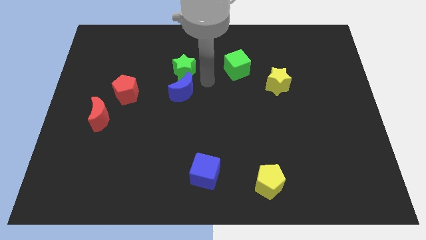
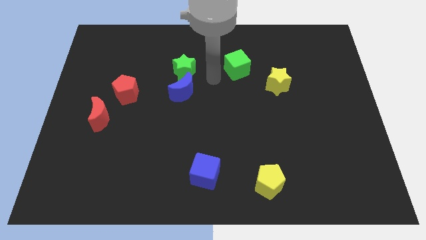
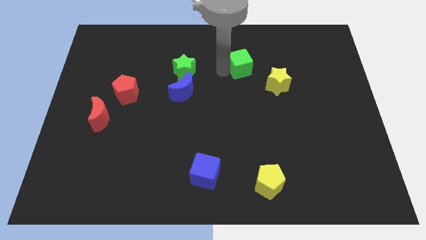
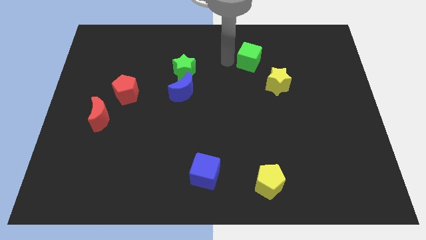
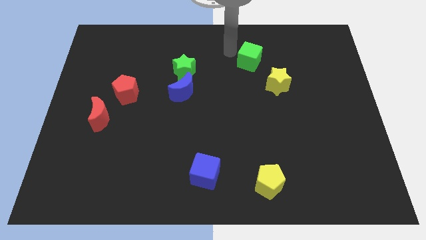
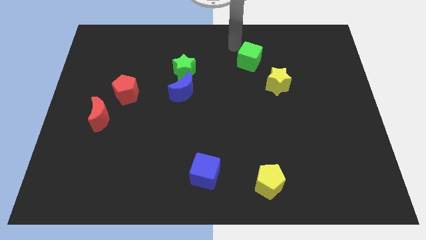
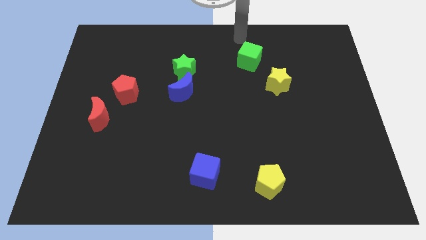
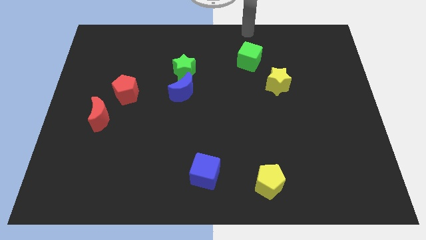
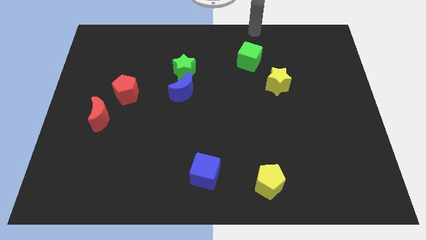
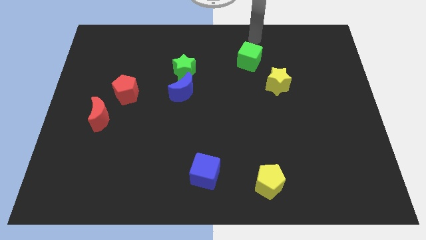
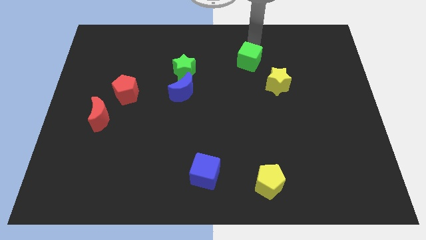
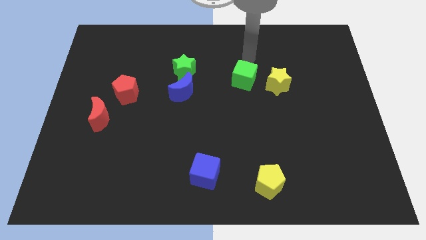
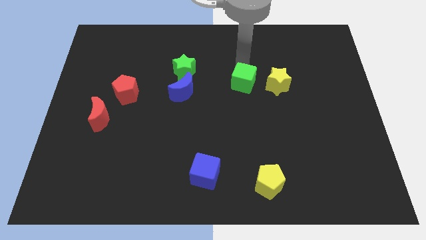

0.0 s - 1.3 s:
move the green cube to the left of the yellow star

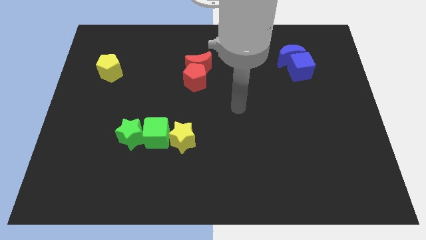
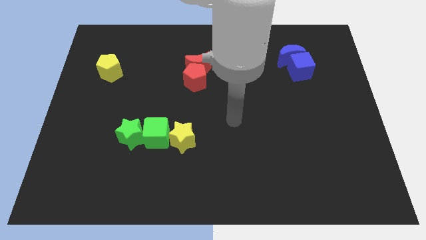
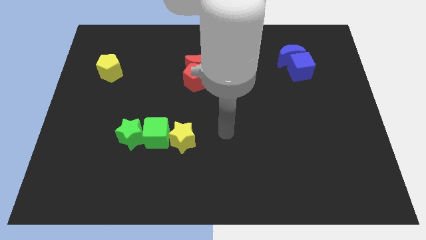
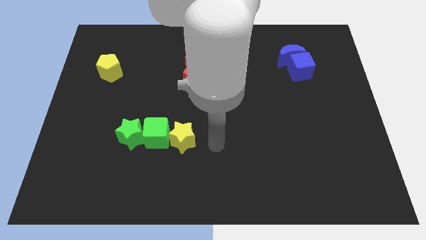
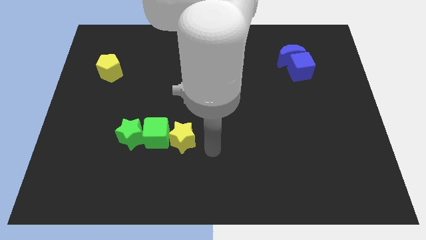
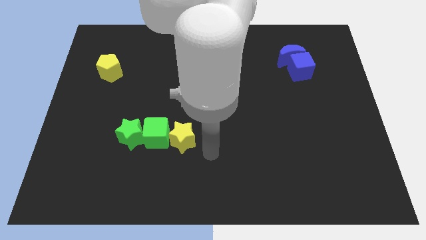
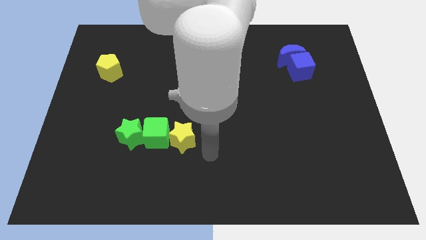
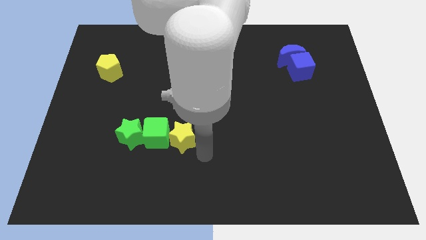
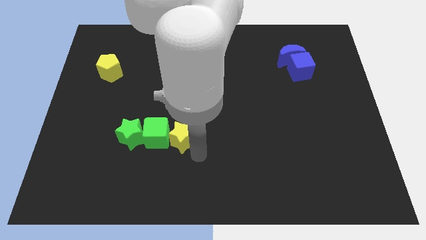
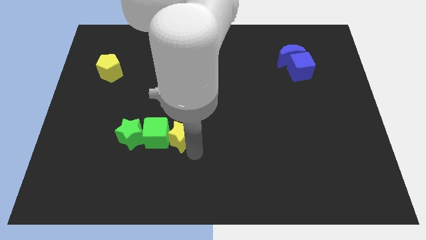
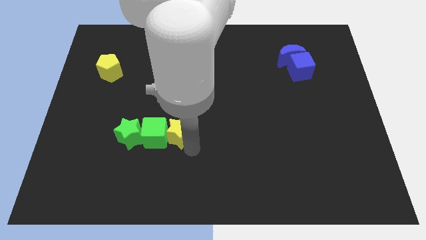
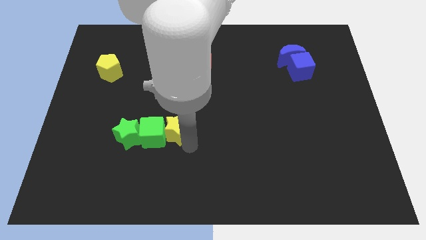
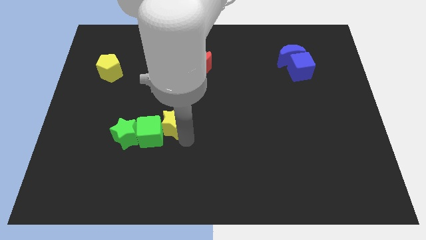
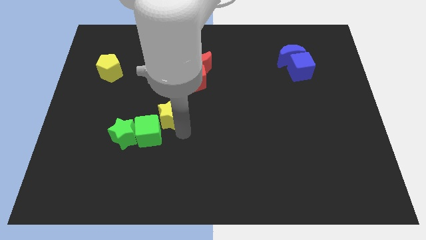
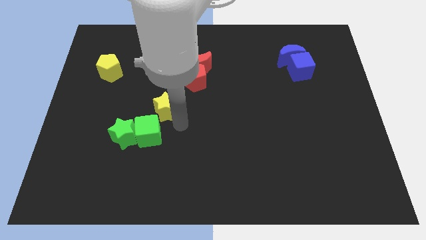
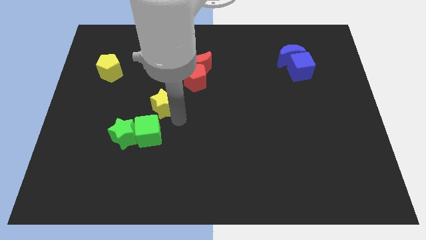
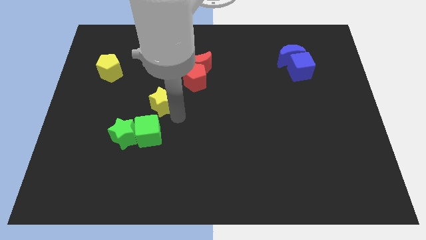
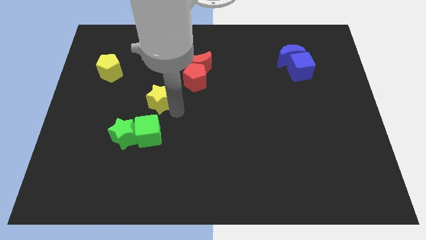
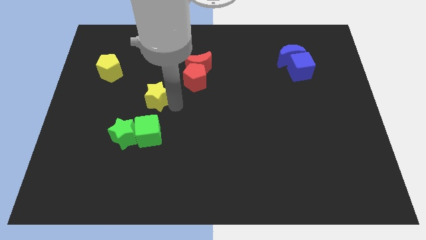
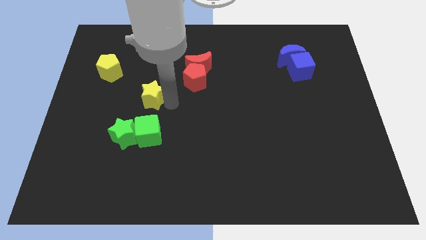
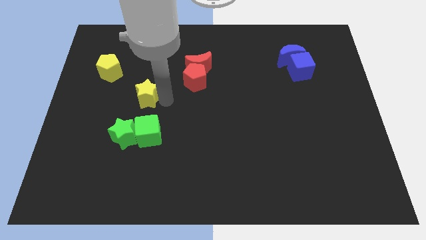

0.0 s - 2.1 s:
place the yellow star above the green cube

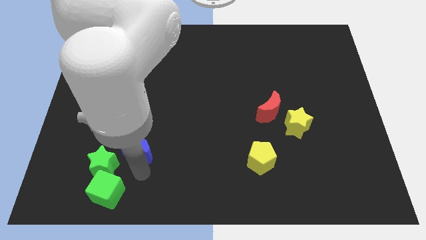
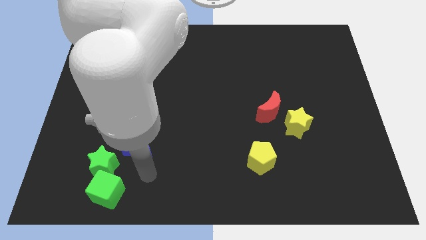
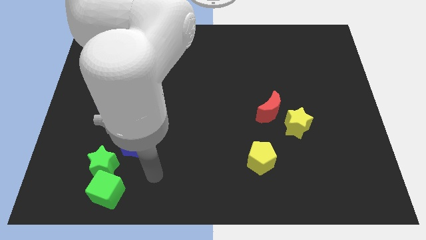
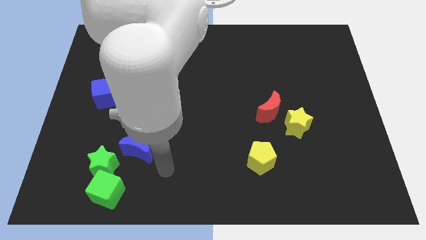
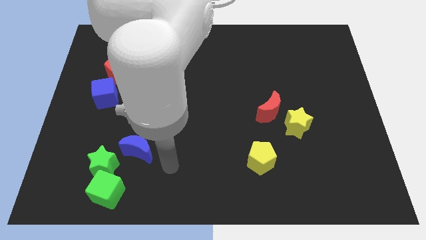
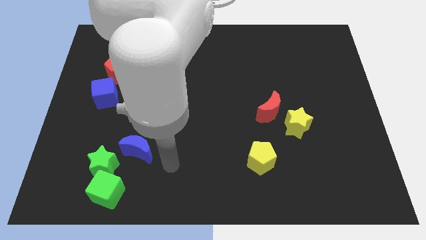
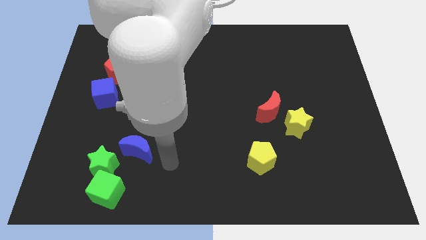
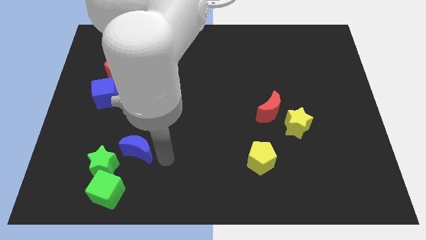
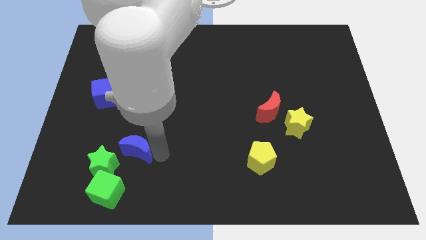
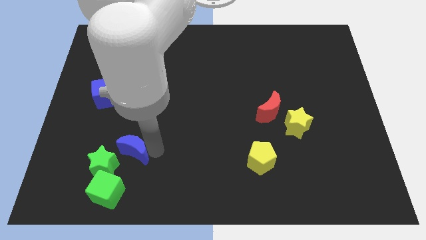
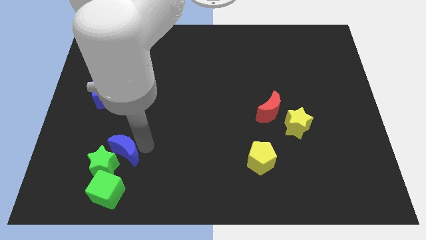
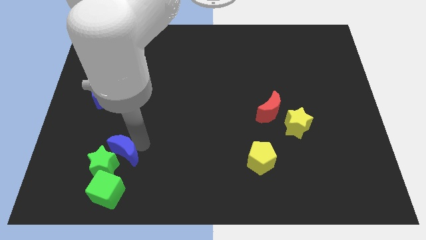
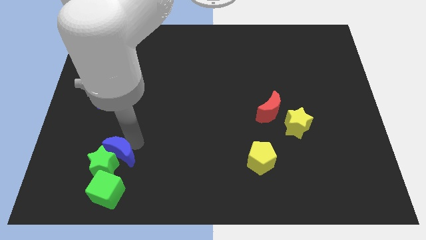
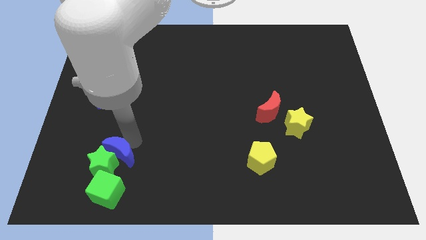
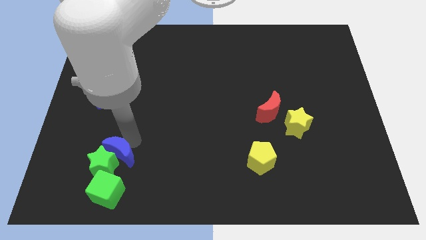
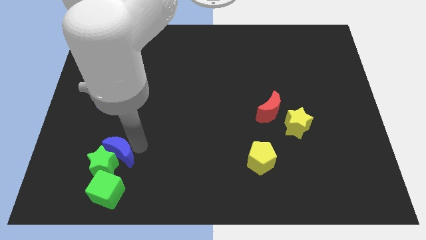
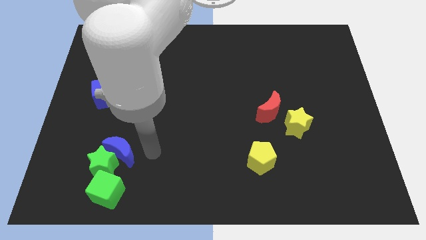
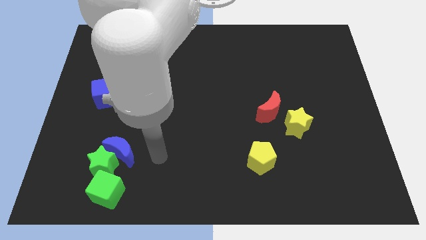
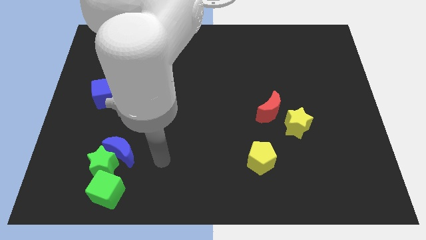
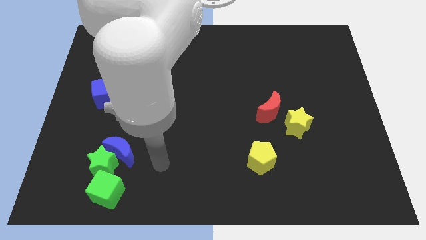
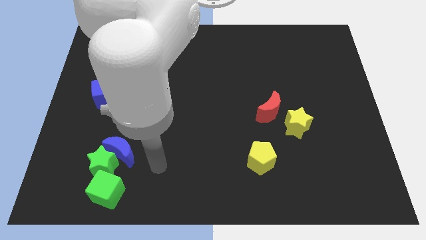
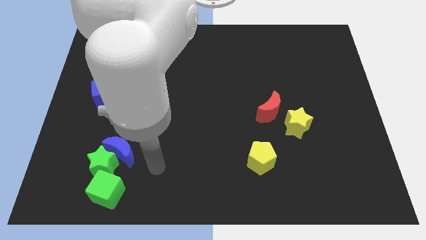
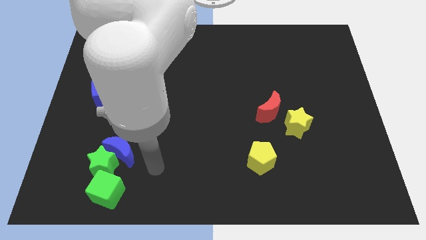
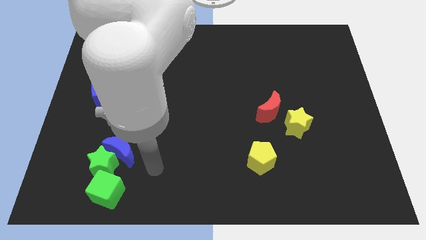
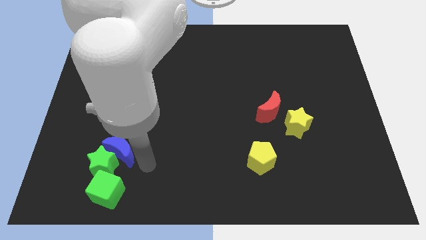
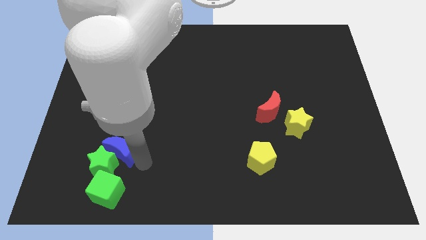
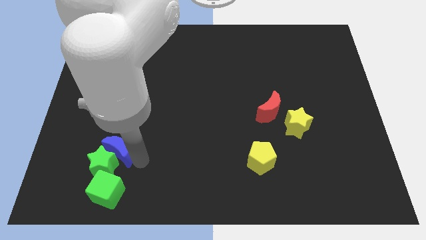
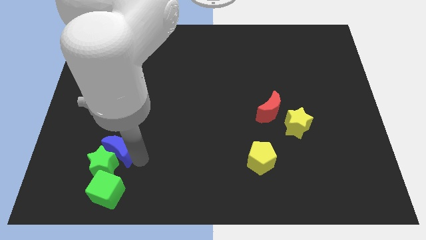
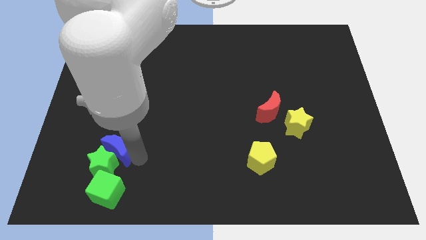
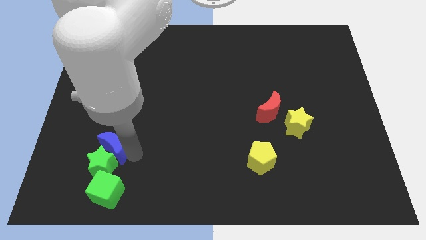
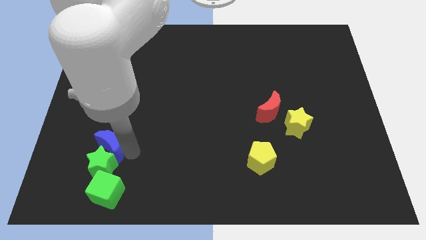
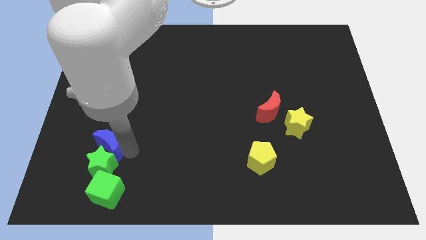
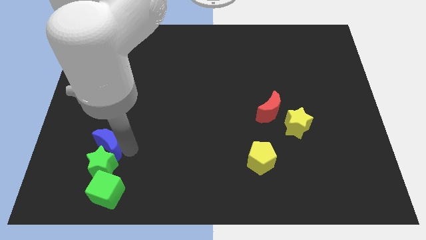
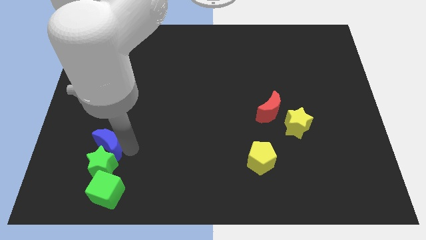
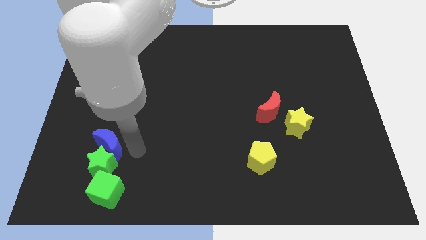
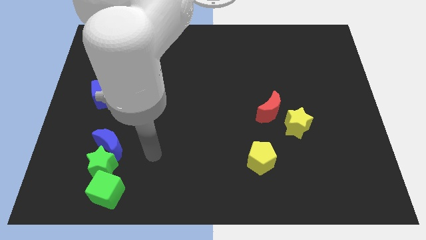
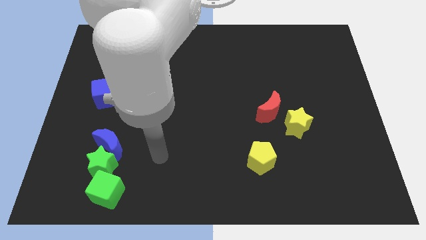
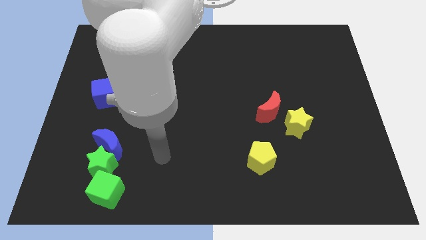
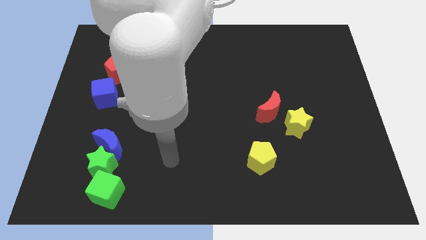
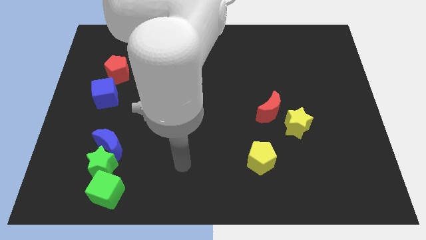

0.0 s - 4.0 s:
push the blue moon to the top side of the green star

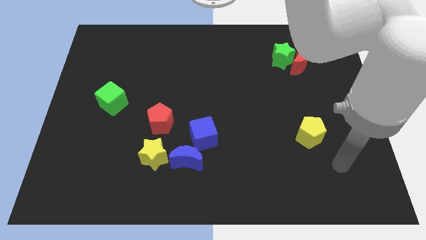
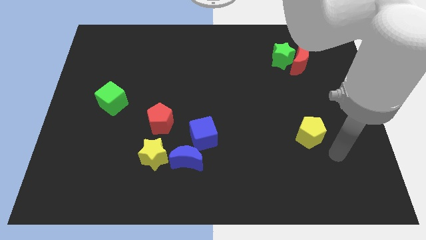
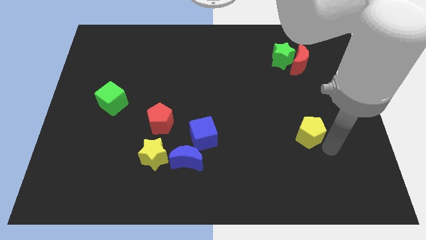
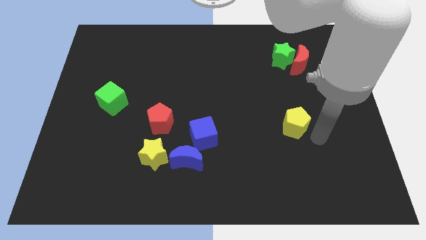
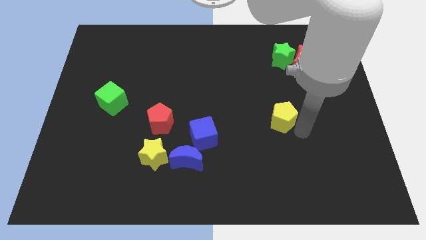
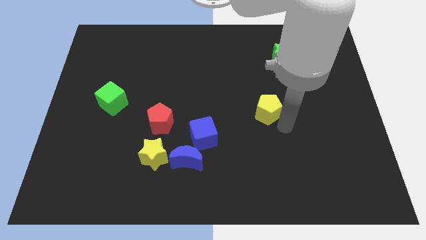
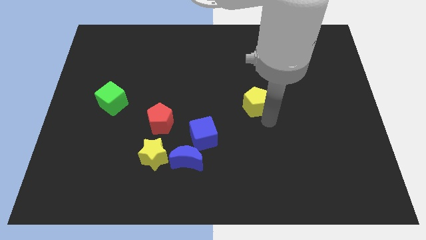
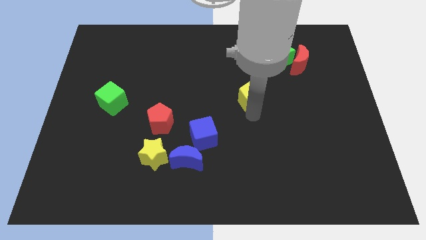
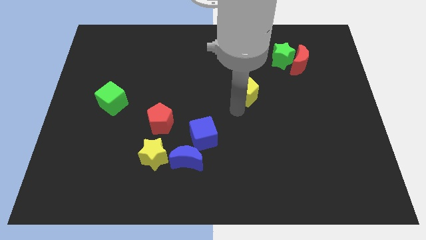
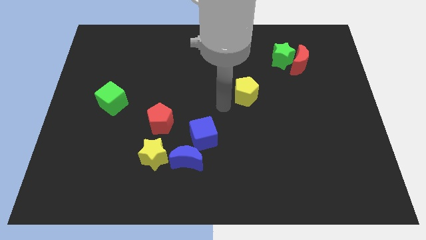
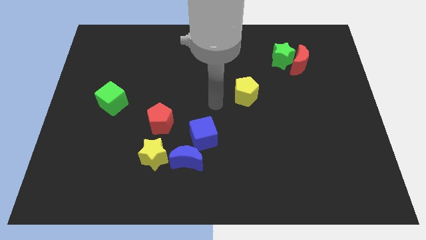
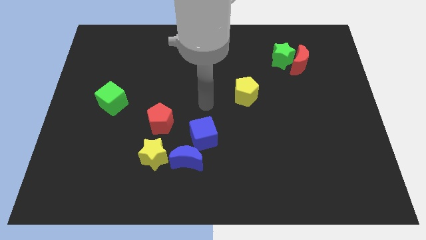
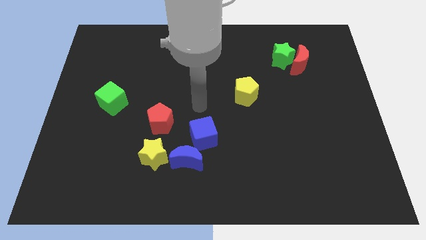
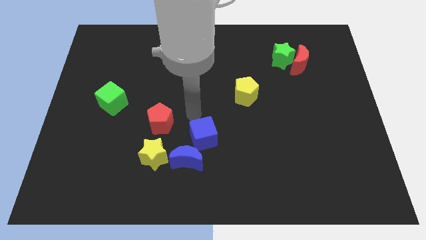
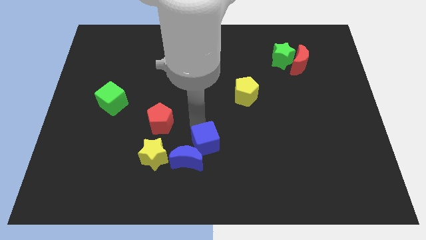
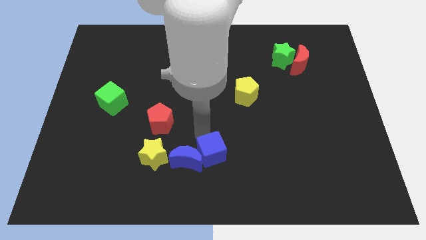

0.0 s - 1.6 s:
push blue cube close to blue moon
